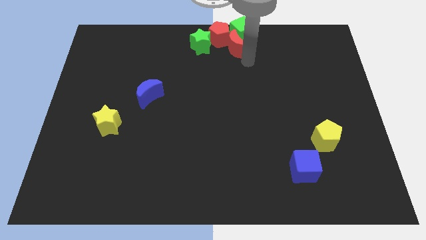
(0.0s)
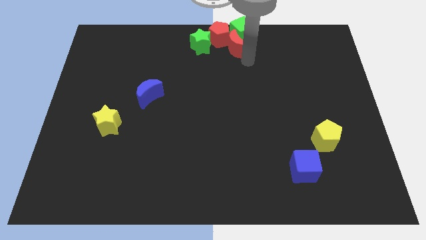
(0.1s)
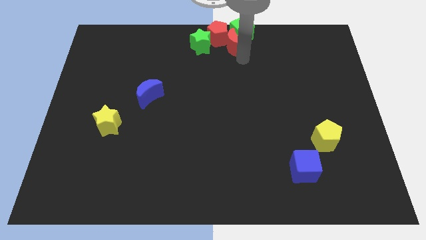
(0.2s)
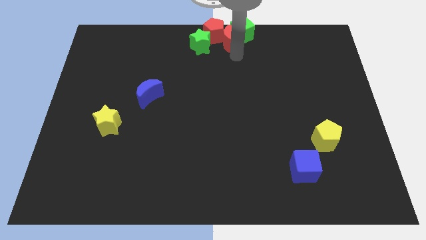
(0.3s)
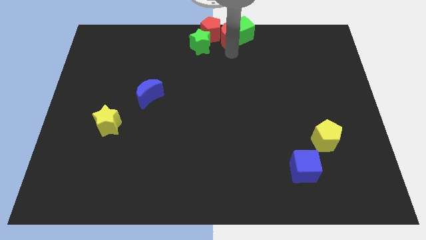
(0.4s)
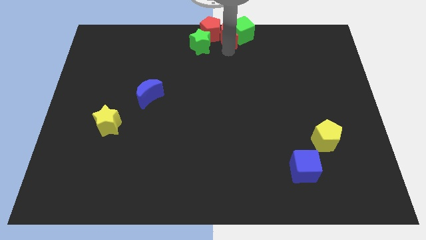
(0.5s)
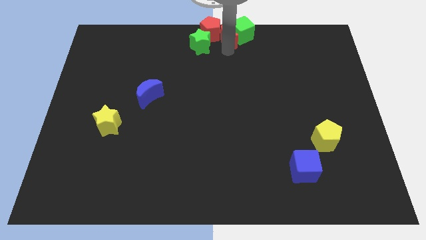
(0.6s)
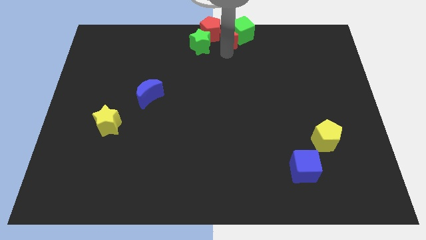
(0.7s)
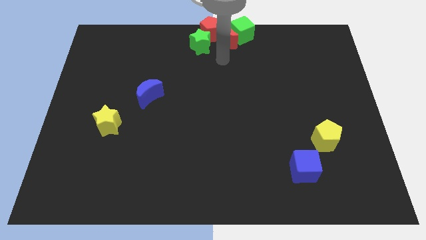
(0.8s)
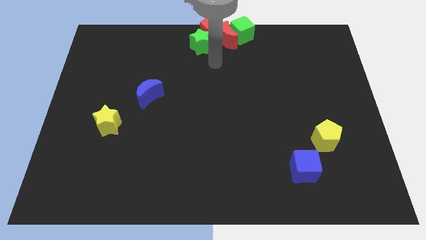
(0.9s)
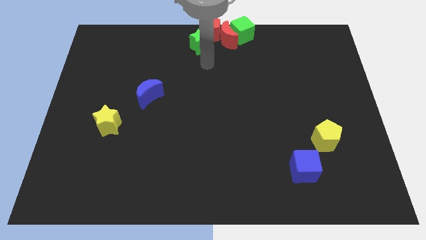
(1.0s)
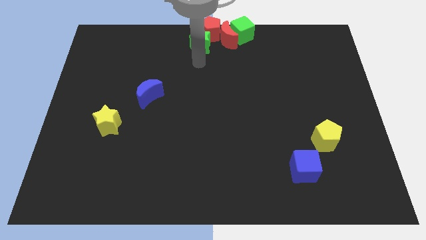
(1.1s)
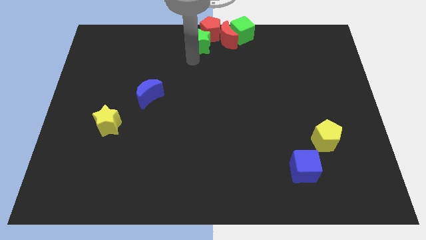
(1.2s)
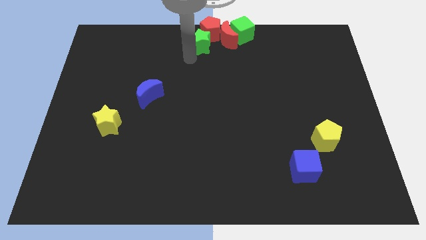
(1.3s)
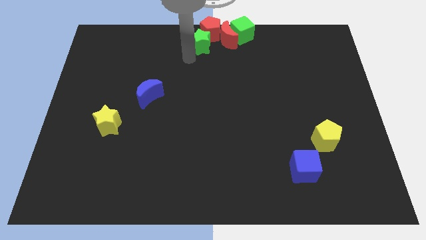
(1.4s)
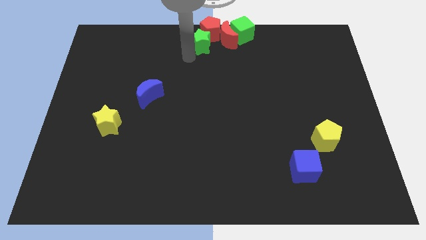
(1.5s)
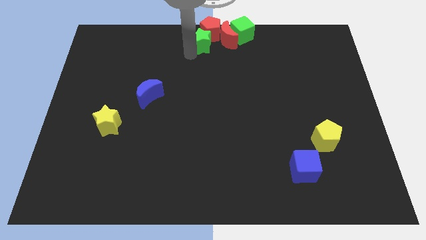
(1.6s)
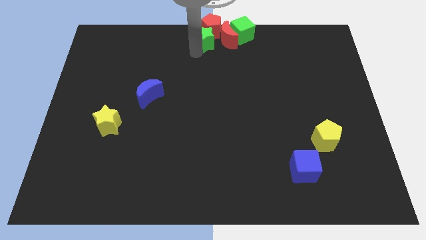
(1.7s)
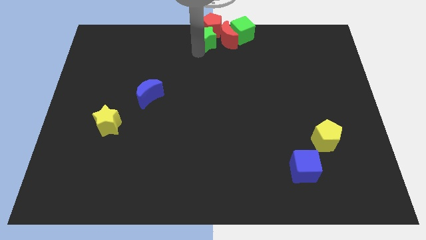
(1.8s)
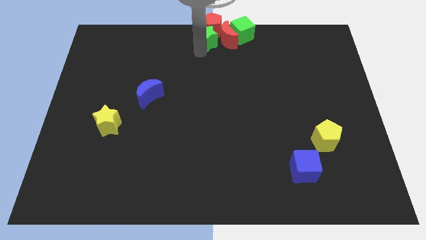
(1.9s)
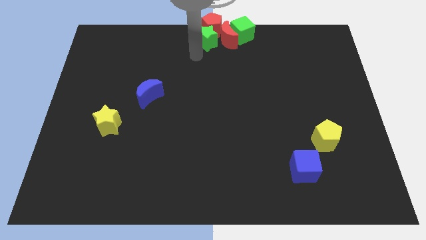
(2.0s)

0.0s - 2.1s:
slightly adjust the green blocks and red blocks towards top side

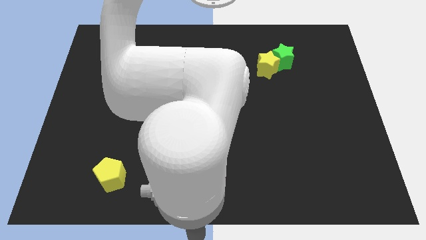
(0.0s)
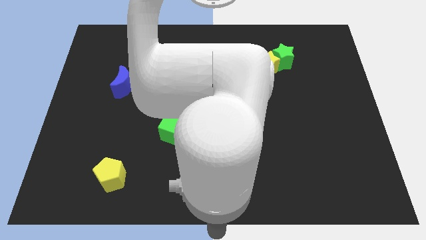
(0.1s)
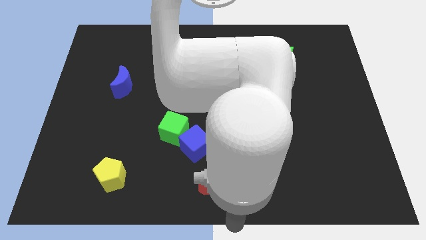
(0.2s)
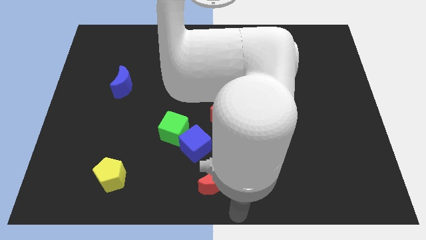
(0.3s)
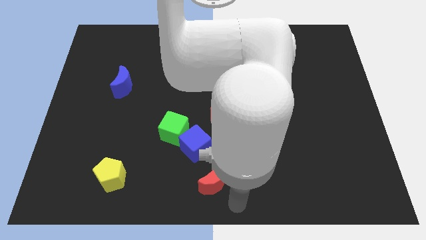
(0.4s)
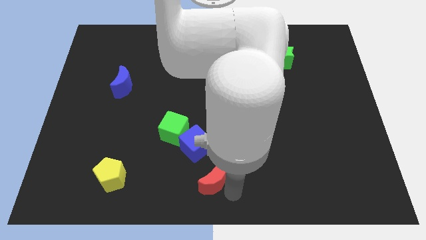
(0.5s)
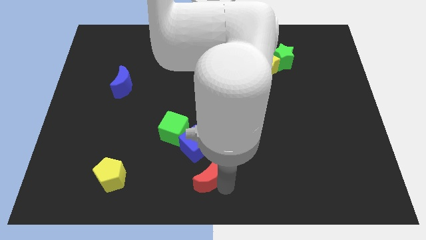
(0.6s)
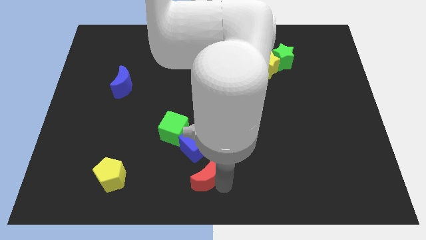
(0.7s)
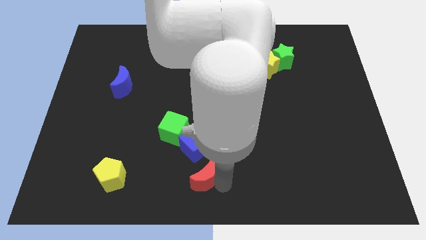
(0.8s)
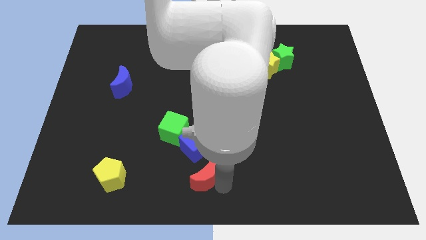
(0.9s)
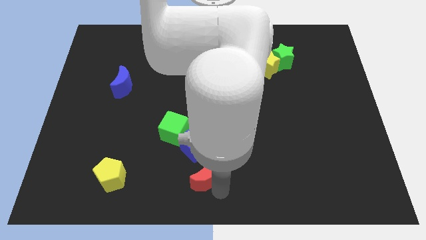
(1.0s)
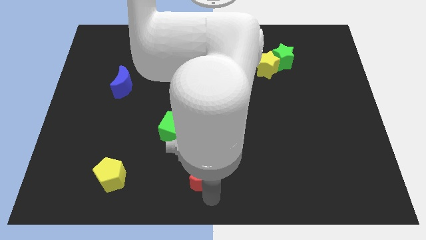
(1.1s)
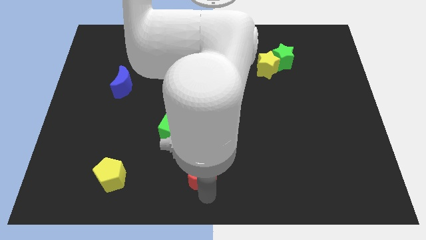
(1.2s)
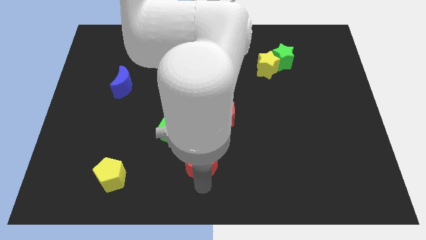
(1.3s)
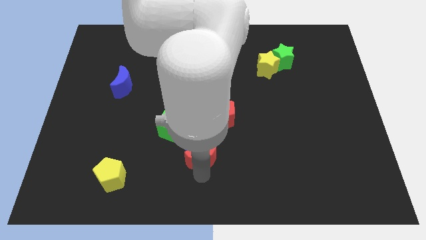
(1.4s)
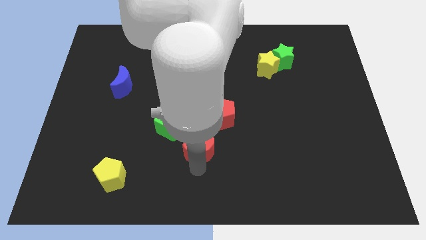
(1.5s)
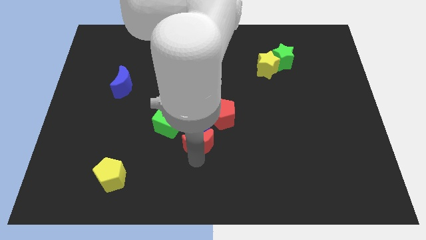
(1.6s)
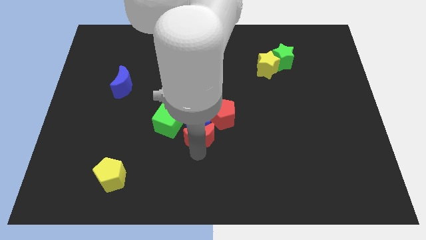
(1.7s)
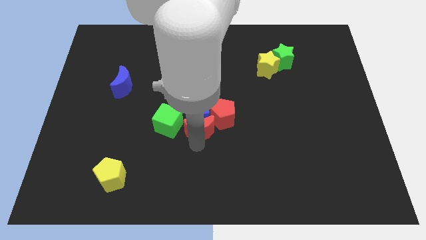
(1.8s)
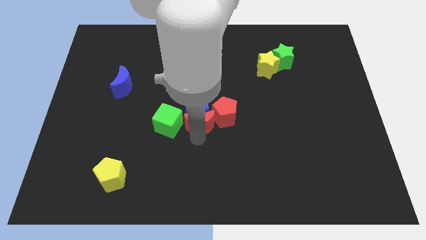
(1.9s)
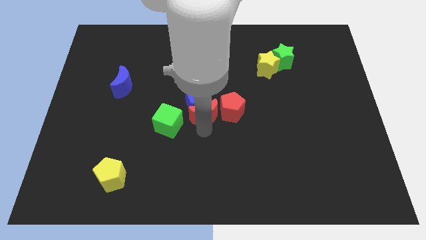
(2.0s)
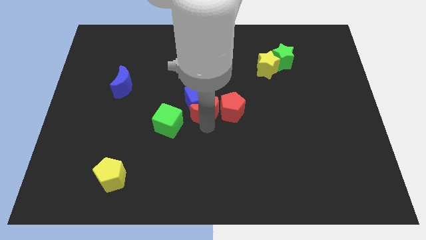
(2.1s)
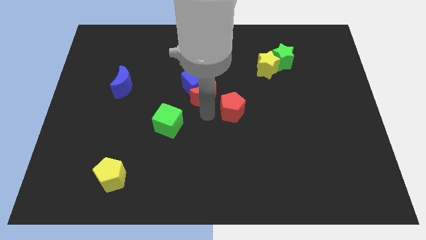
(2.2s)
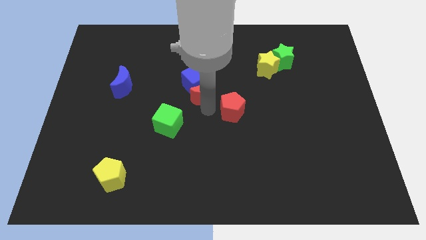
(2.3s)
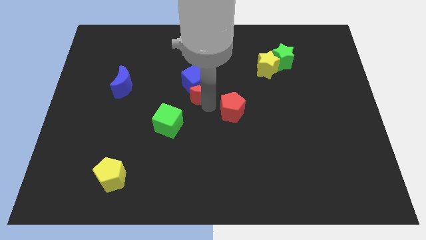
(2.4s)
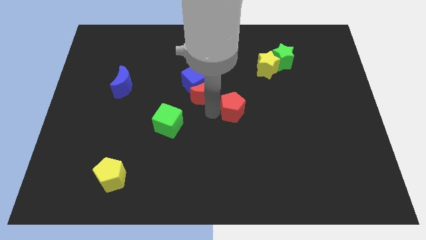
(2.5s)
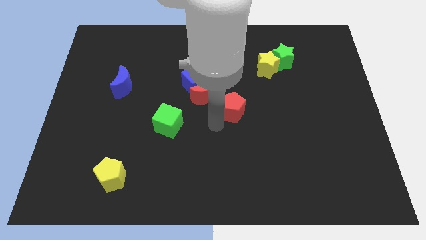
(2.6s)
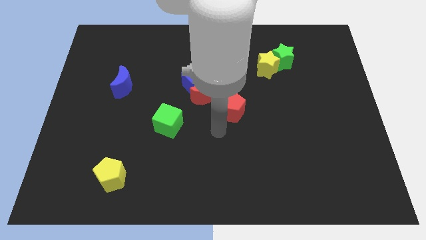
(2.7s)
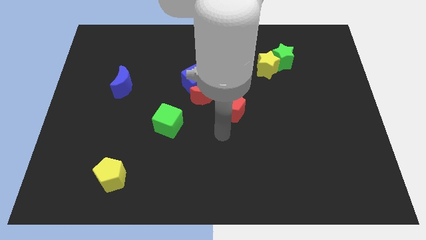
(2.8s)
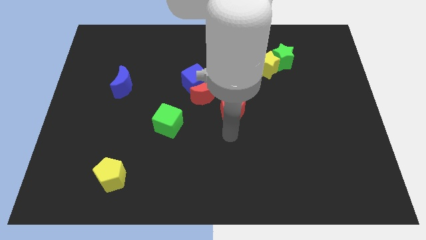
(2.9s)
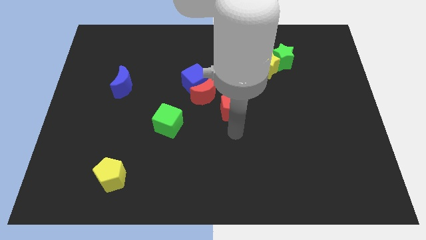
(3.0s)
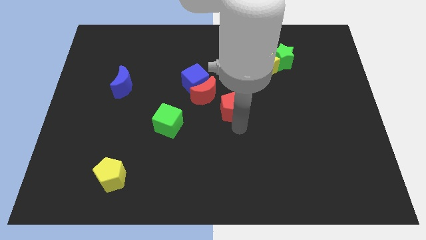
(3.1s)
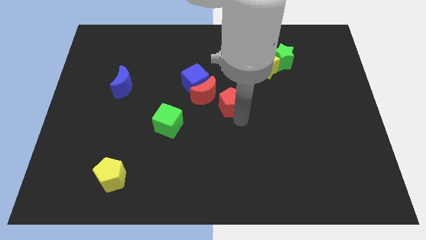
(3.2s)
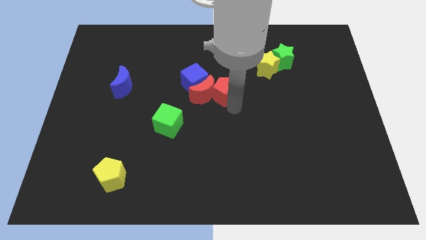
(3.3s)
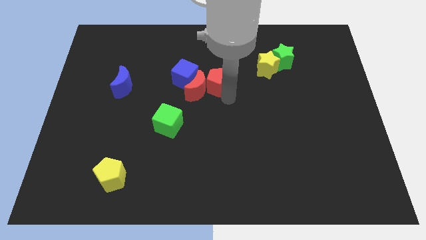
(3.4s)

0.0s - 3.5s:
push the red moon and red pentagon in the blue cube

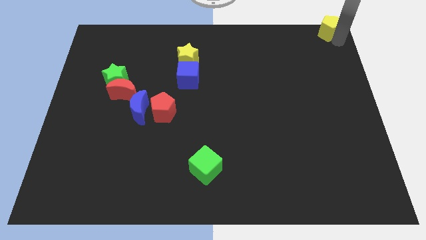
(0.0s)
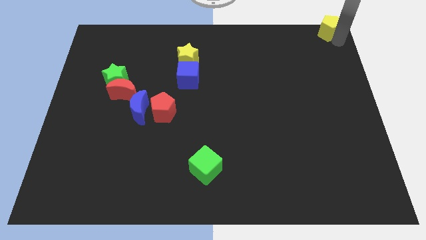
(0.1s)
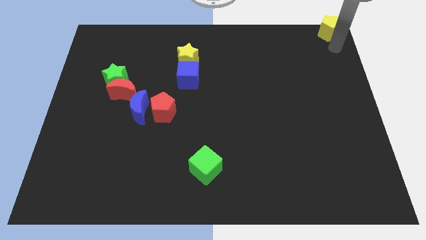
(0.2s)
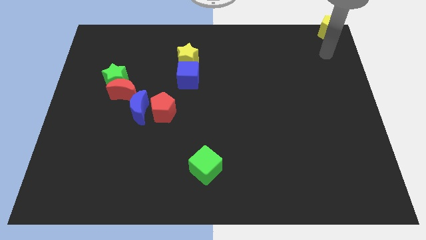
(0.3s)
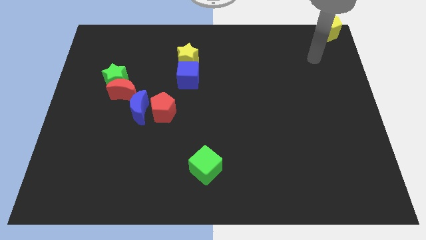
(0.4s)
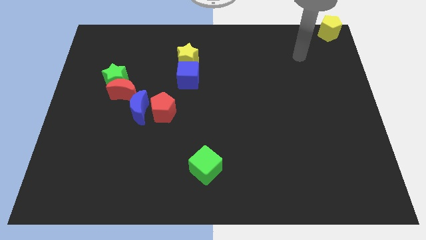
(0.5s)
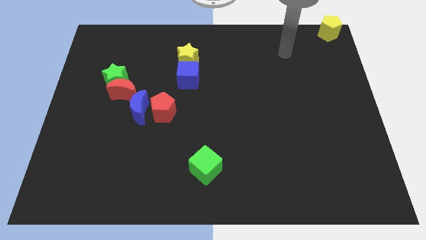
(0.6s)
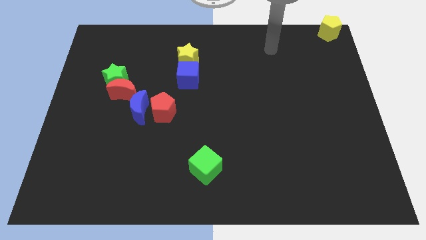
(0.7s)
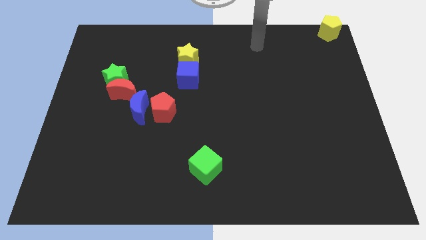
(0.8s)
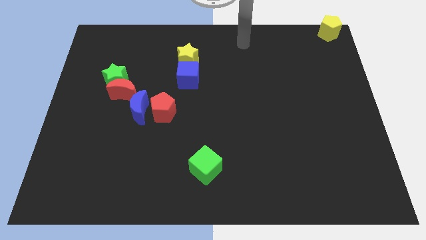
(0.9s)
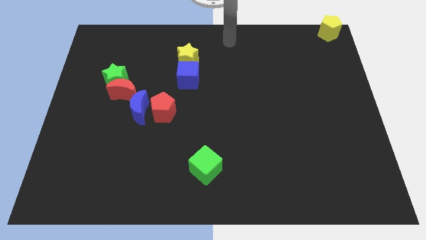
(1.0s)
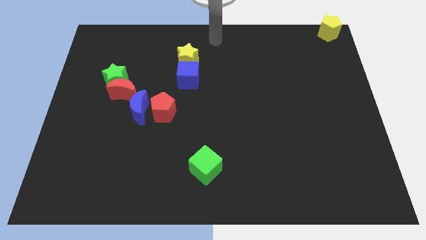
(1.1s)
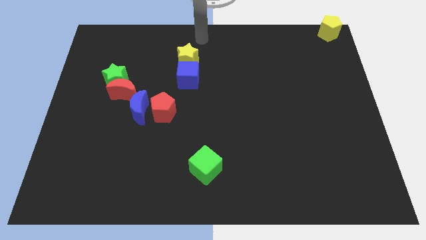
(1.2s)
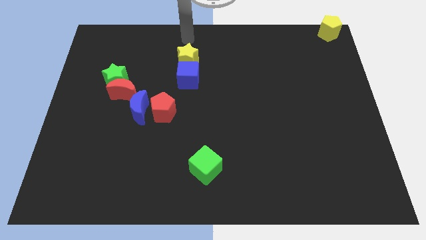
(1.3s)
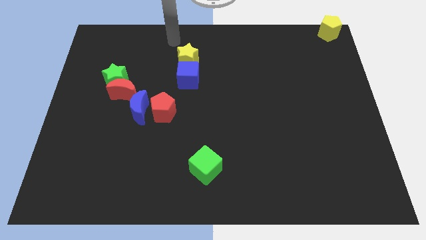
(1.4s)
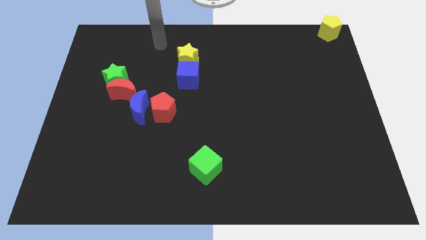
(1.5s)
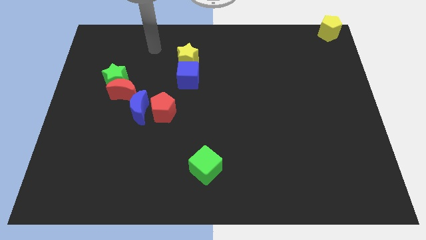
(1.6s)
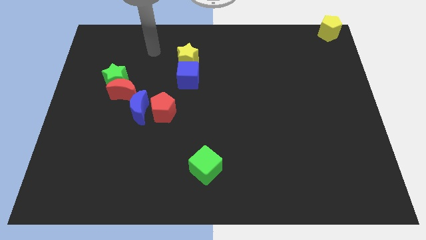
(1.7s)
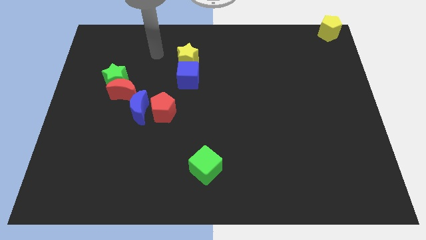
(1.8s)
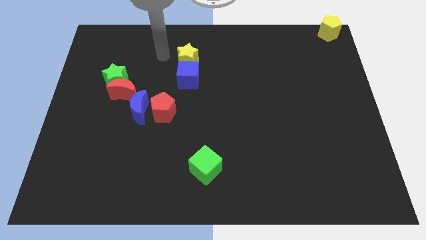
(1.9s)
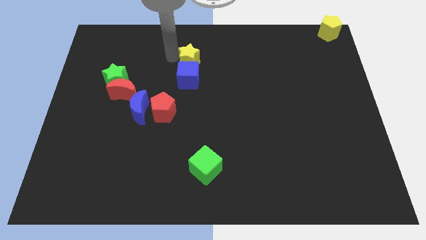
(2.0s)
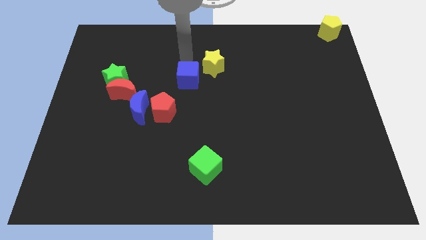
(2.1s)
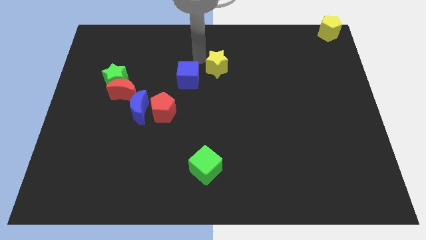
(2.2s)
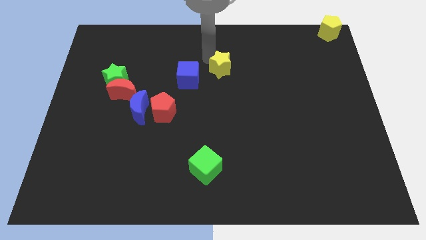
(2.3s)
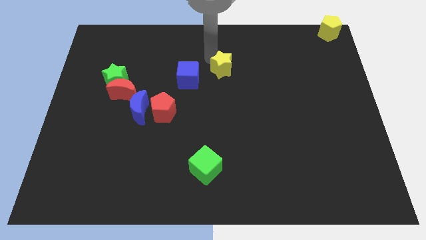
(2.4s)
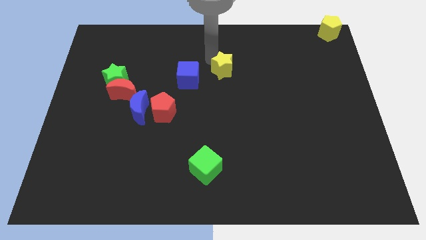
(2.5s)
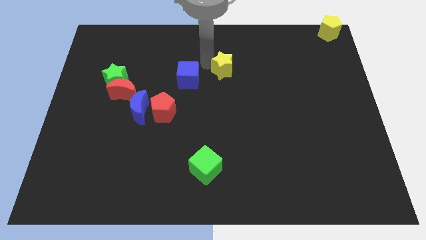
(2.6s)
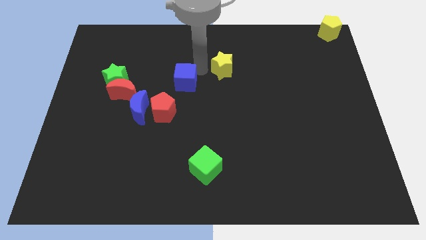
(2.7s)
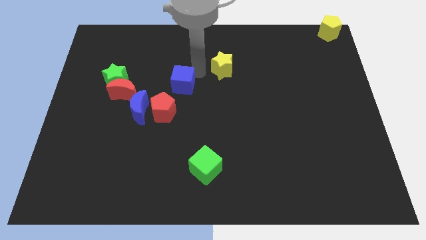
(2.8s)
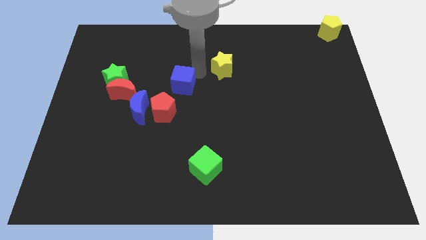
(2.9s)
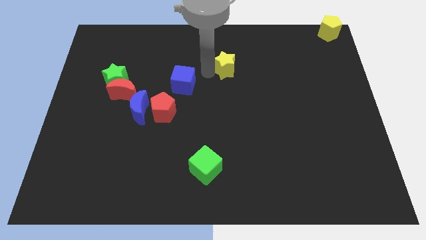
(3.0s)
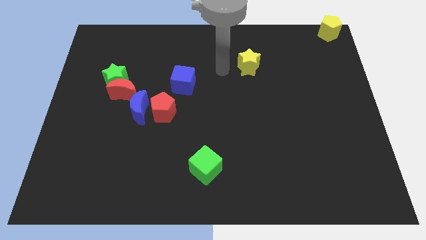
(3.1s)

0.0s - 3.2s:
move your arm away from the yellow pentagon

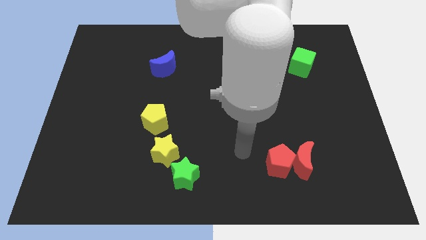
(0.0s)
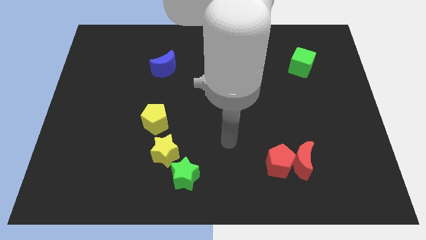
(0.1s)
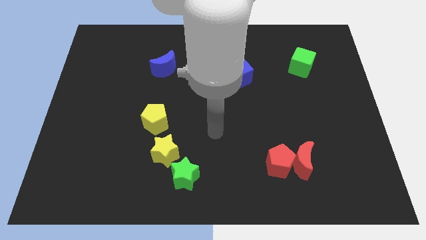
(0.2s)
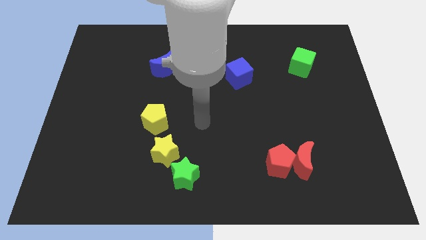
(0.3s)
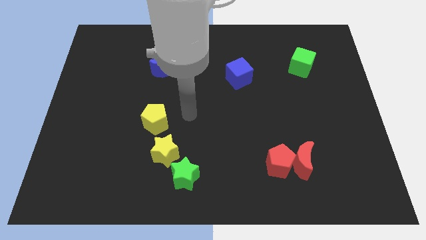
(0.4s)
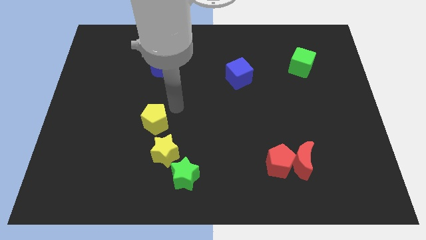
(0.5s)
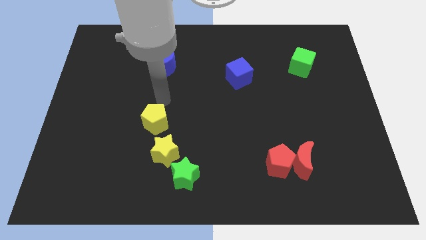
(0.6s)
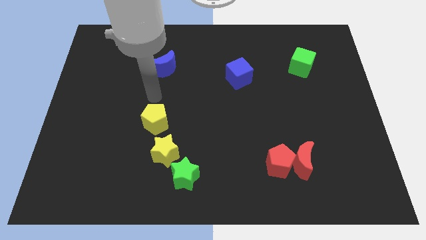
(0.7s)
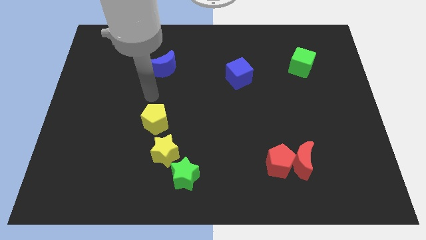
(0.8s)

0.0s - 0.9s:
put your hand in between the blue crescent and yellow pentagon
